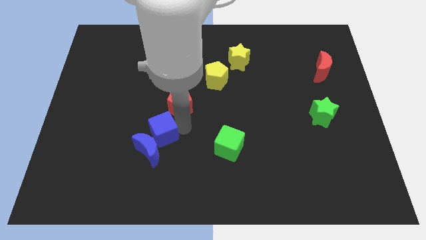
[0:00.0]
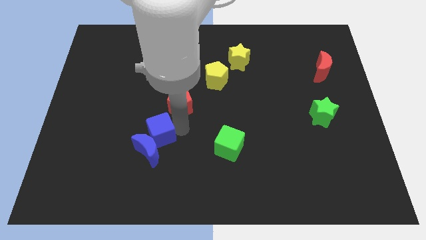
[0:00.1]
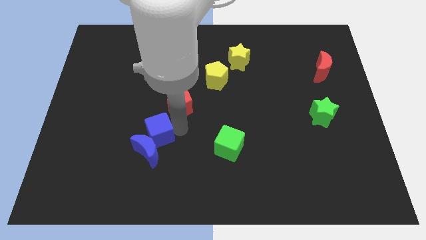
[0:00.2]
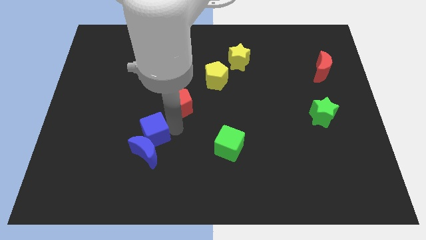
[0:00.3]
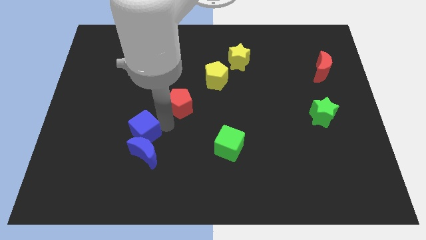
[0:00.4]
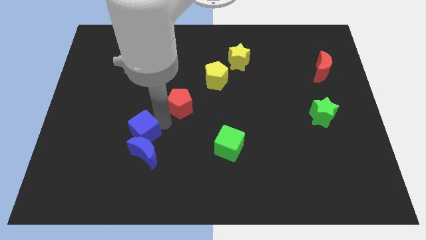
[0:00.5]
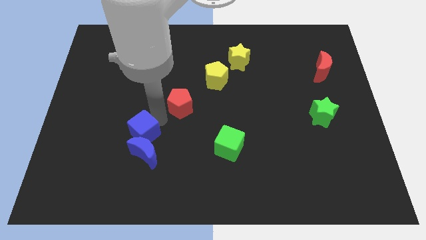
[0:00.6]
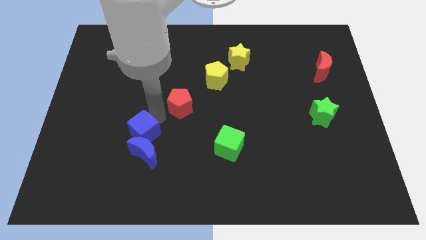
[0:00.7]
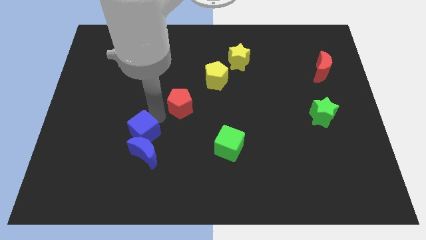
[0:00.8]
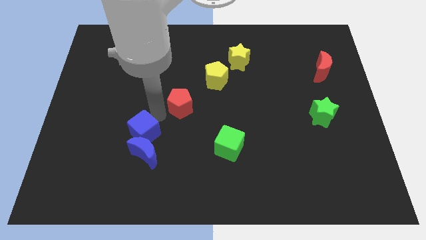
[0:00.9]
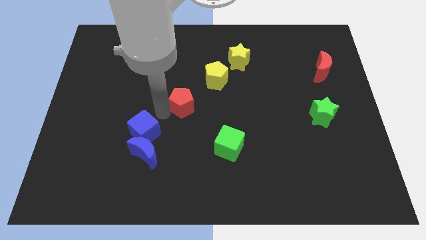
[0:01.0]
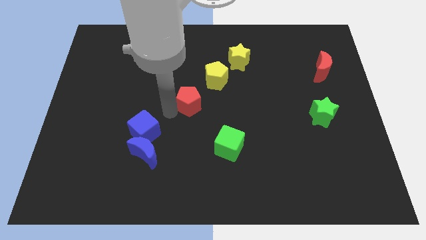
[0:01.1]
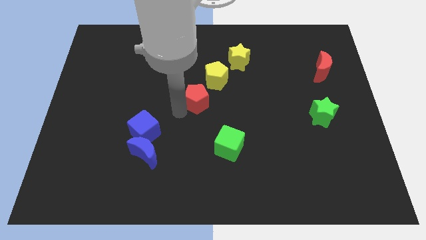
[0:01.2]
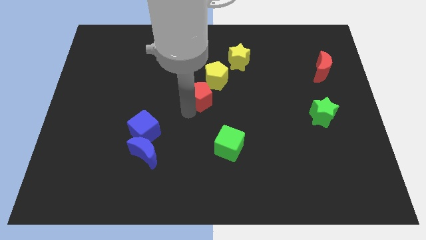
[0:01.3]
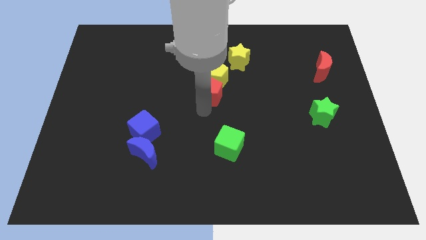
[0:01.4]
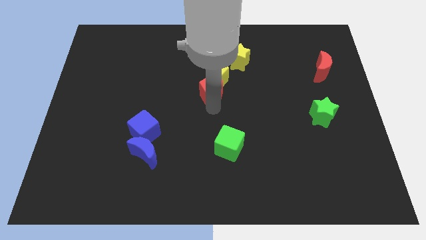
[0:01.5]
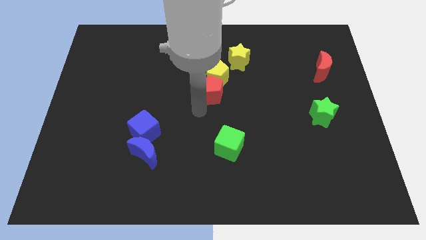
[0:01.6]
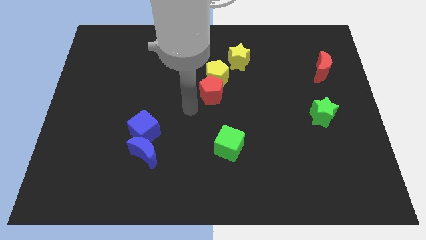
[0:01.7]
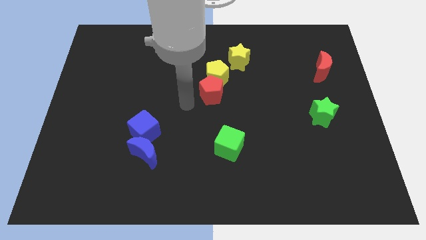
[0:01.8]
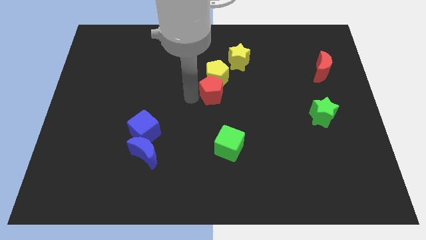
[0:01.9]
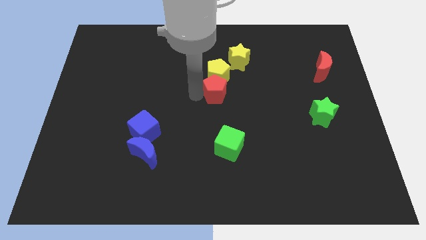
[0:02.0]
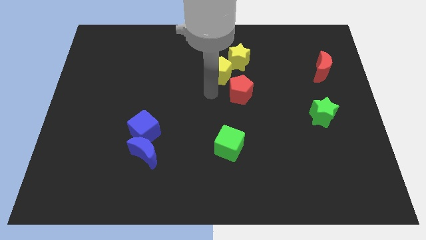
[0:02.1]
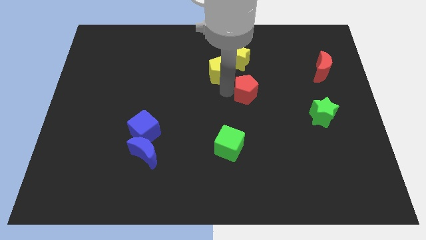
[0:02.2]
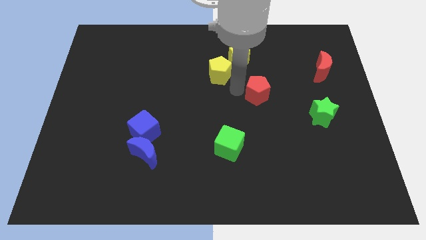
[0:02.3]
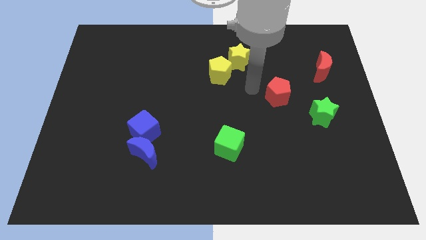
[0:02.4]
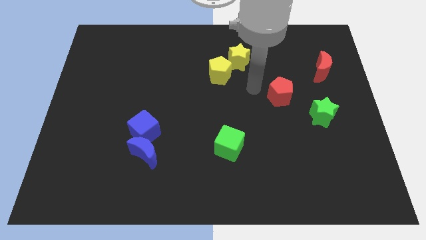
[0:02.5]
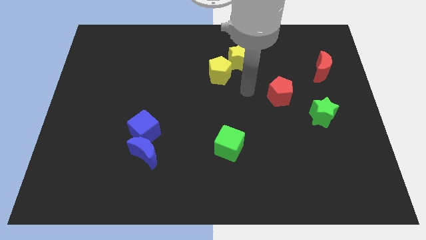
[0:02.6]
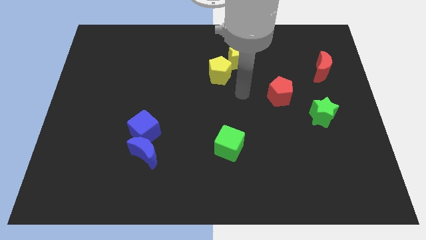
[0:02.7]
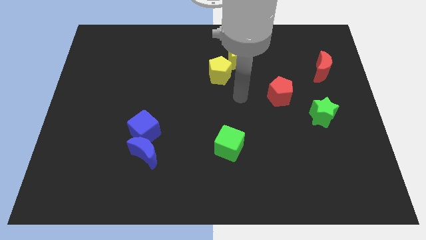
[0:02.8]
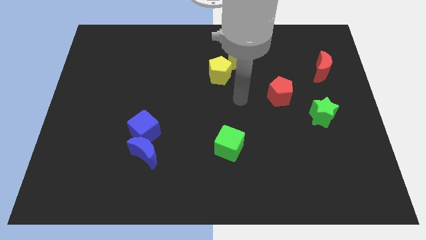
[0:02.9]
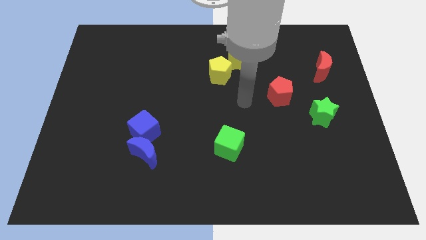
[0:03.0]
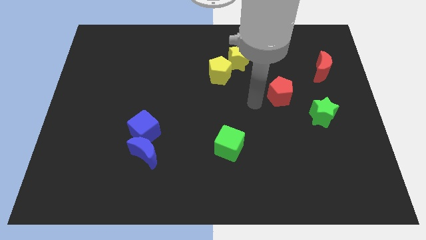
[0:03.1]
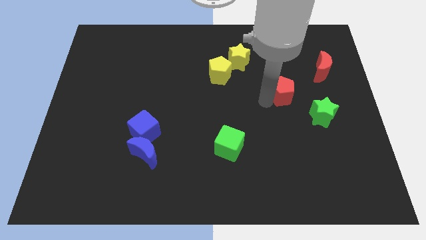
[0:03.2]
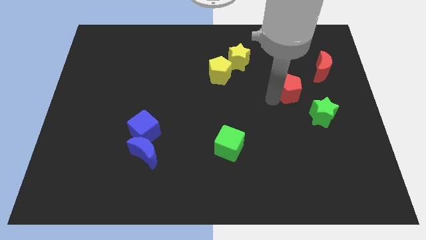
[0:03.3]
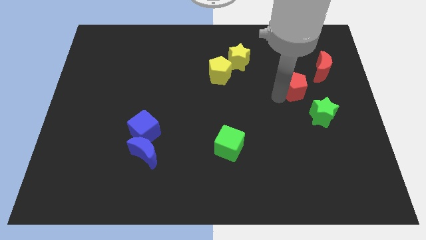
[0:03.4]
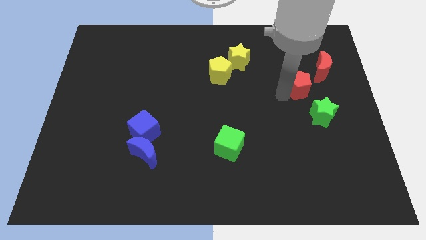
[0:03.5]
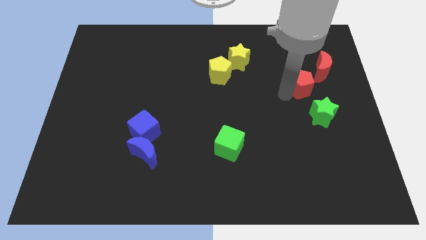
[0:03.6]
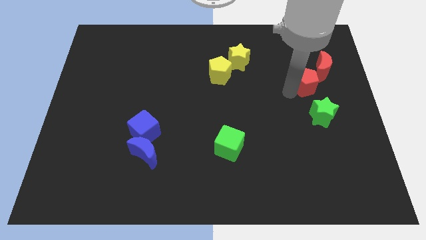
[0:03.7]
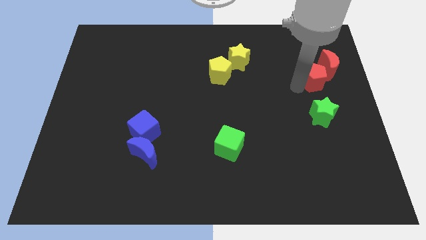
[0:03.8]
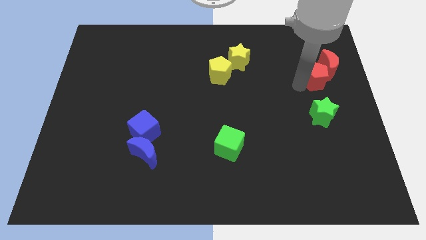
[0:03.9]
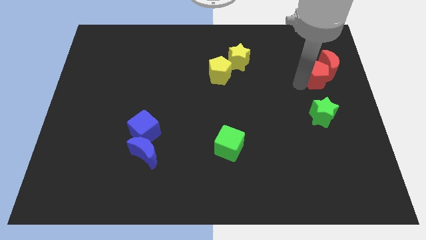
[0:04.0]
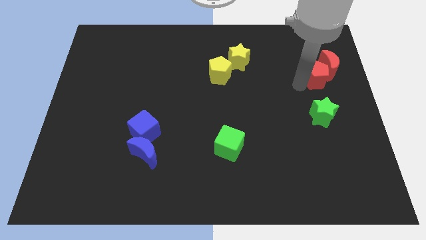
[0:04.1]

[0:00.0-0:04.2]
push the red pentagon into red crescent

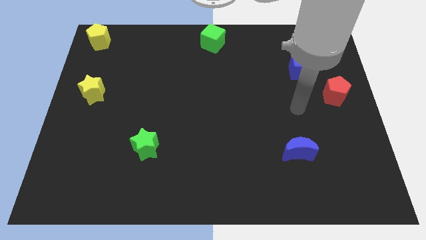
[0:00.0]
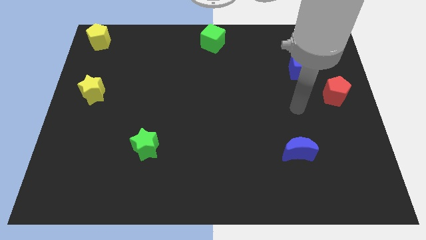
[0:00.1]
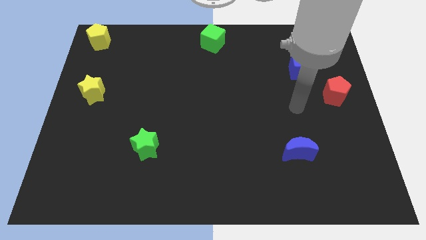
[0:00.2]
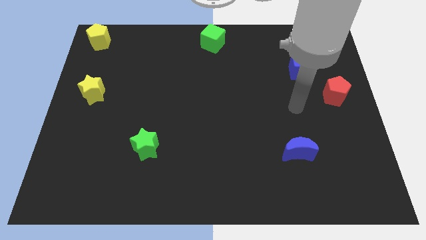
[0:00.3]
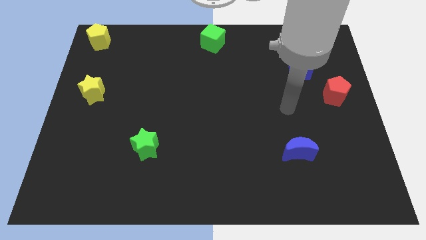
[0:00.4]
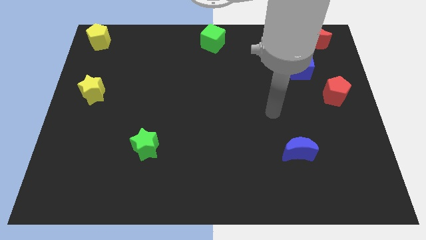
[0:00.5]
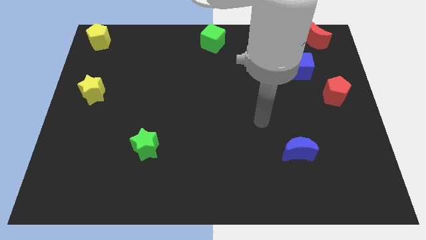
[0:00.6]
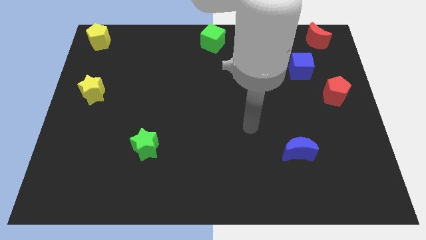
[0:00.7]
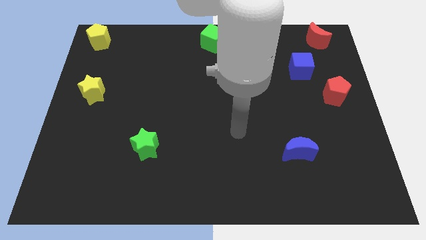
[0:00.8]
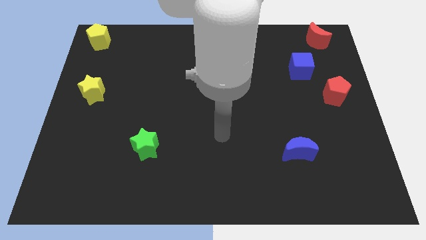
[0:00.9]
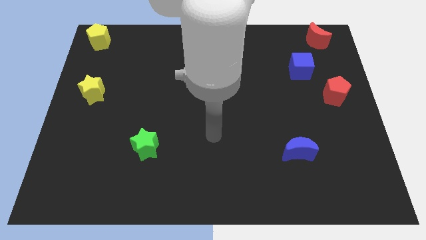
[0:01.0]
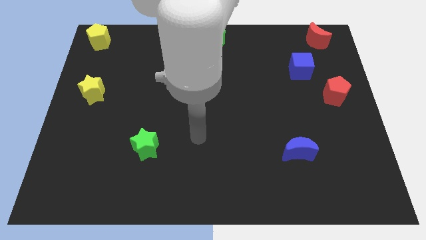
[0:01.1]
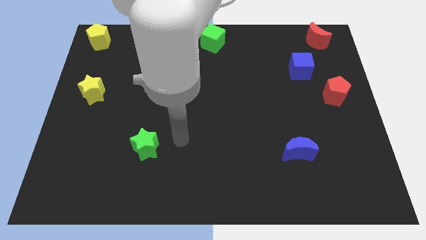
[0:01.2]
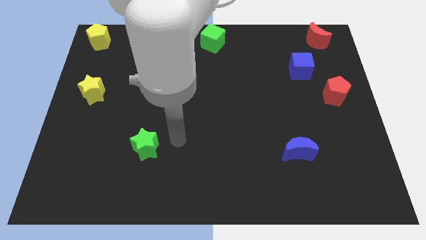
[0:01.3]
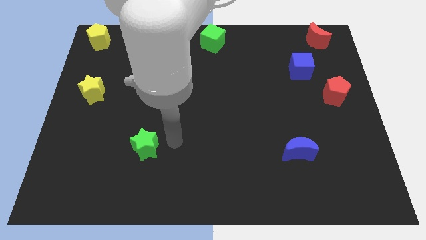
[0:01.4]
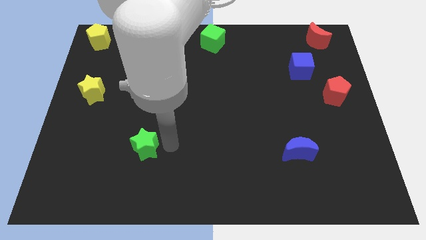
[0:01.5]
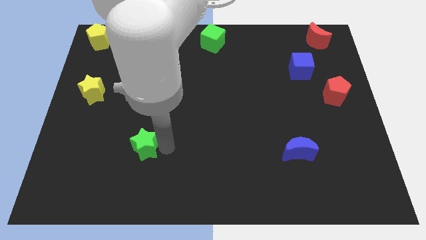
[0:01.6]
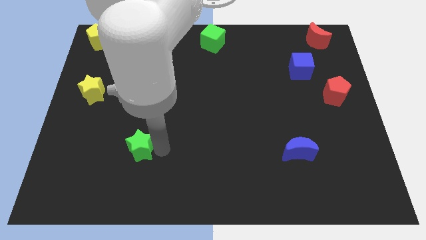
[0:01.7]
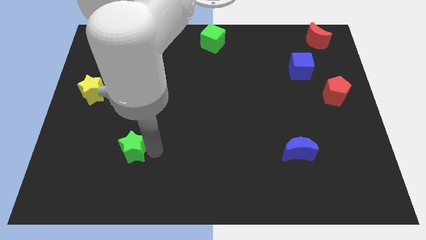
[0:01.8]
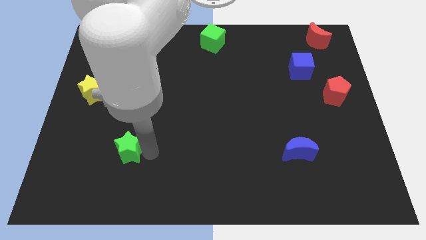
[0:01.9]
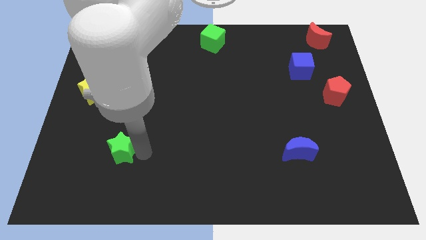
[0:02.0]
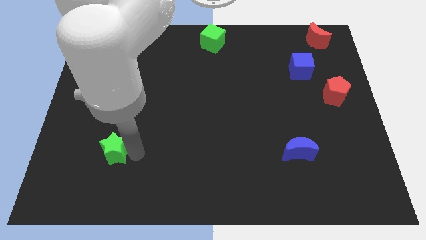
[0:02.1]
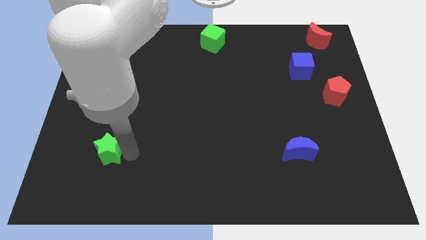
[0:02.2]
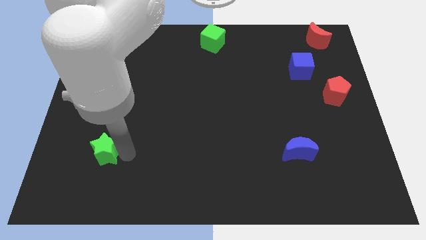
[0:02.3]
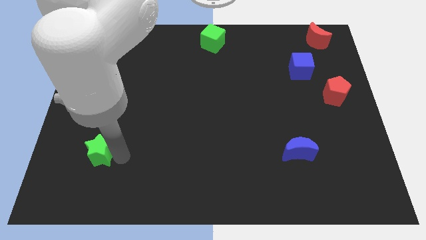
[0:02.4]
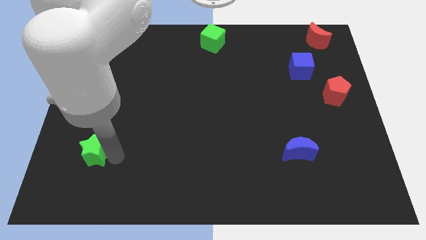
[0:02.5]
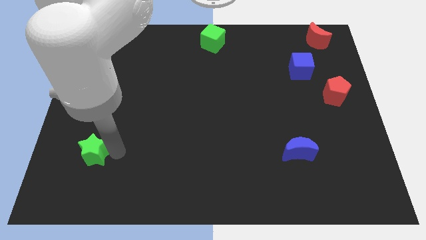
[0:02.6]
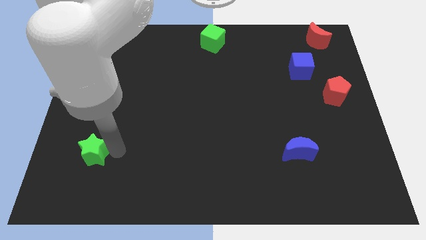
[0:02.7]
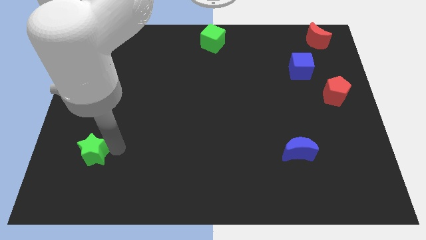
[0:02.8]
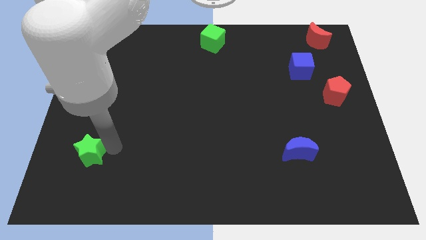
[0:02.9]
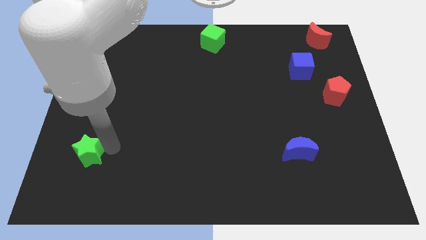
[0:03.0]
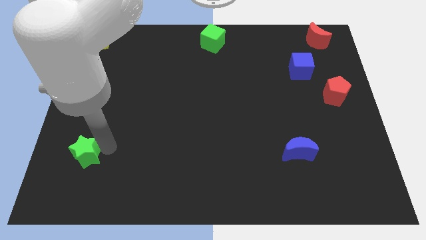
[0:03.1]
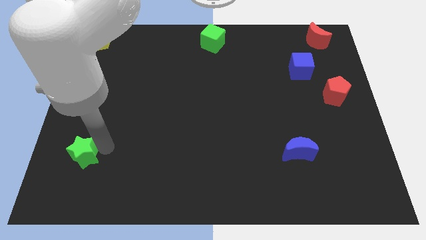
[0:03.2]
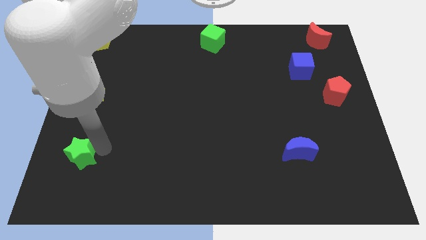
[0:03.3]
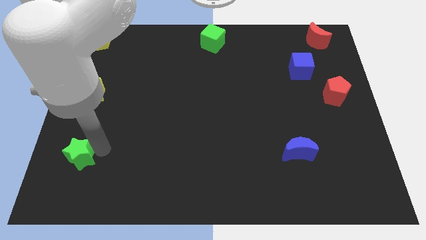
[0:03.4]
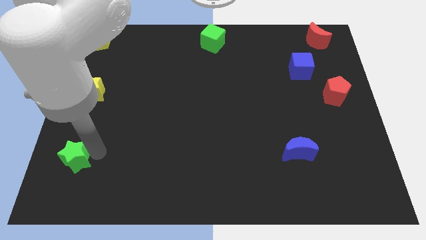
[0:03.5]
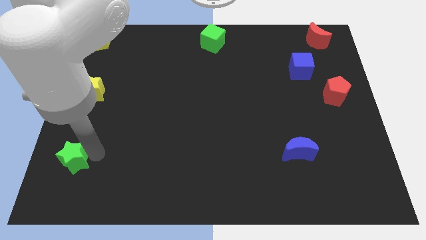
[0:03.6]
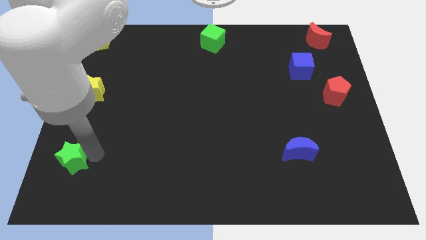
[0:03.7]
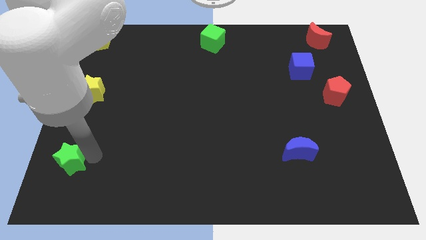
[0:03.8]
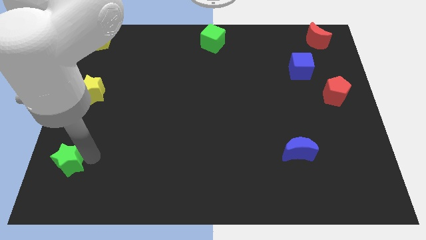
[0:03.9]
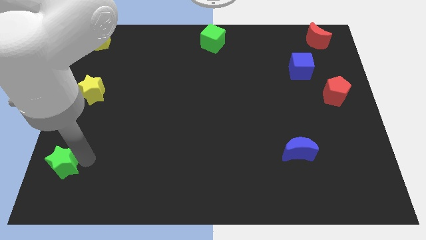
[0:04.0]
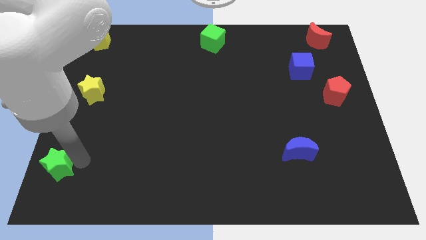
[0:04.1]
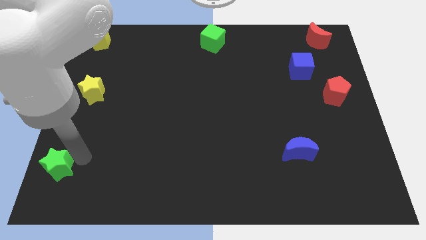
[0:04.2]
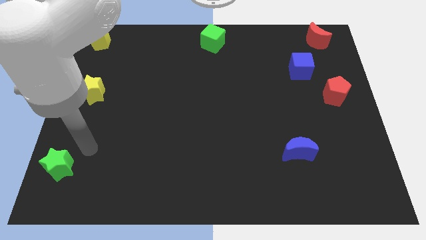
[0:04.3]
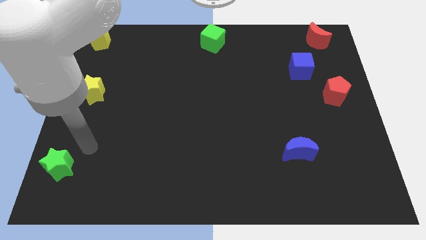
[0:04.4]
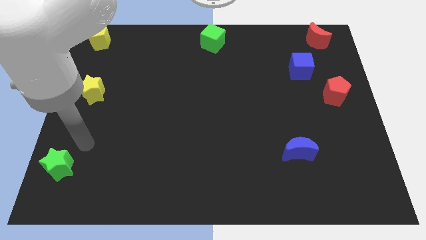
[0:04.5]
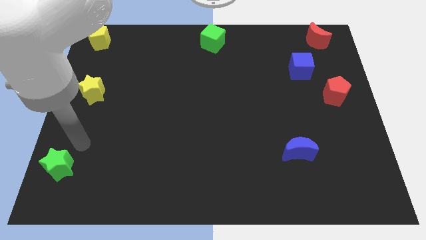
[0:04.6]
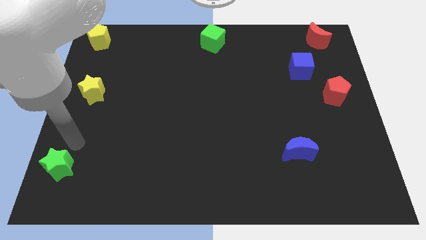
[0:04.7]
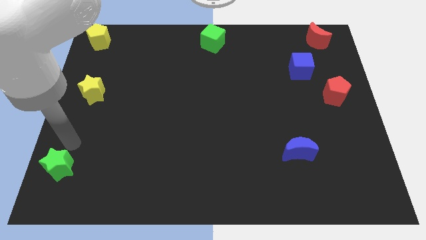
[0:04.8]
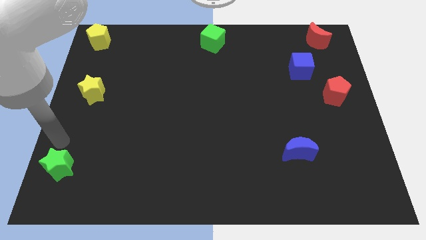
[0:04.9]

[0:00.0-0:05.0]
push the green star to the bottom left of the board
